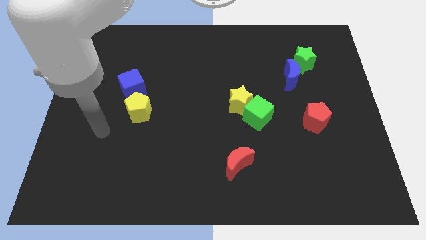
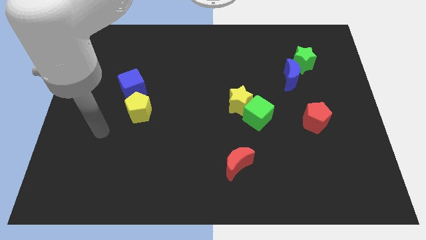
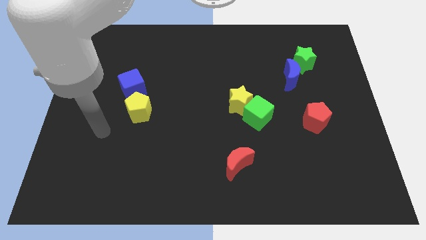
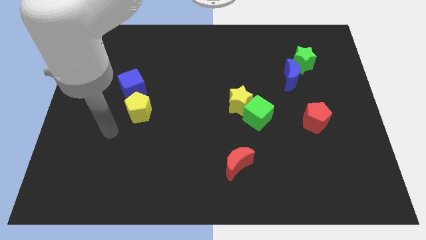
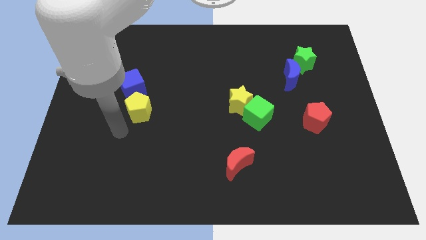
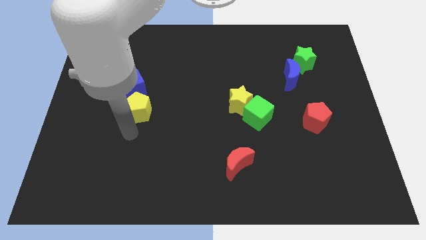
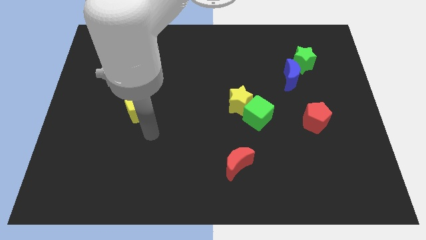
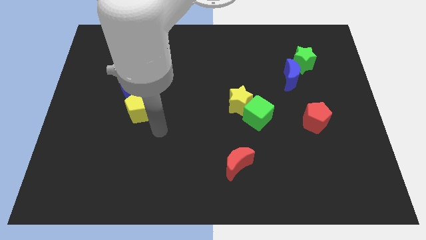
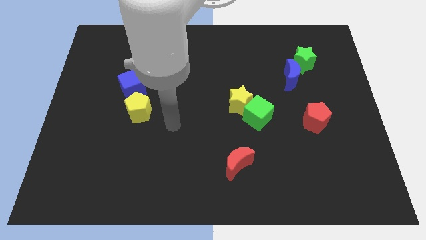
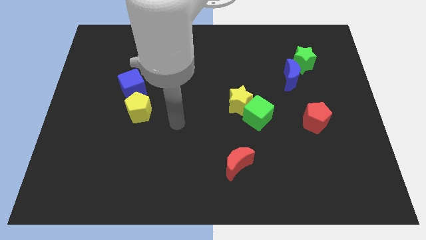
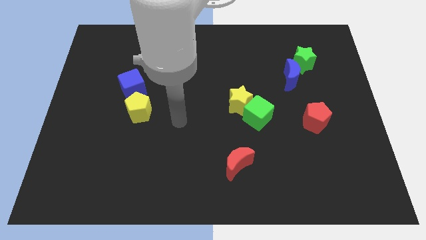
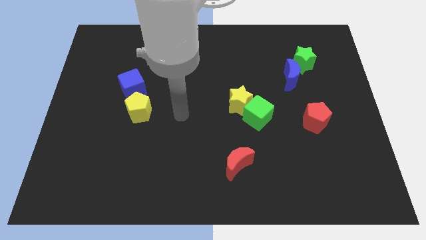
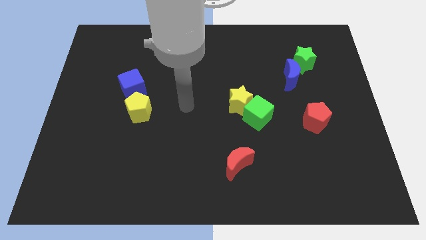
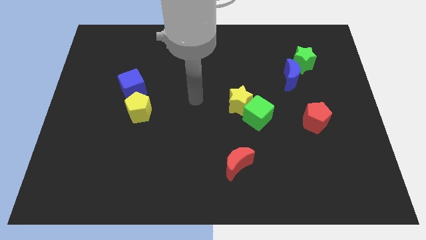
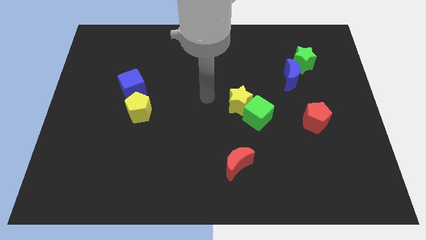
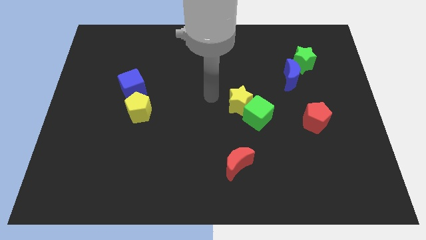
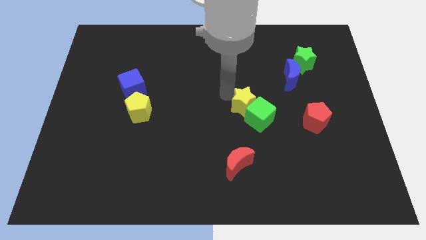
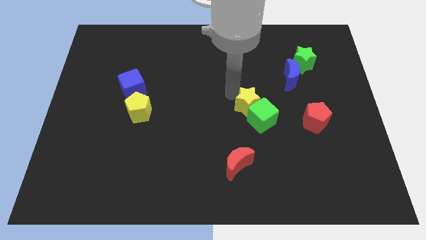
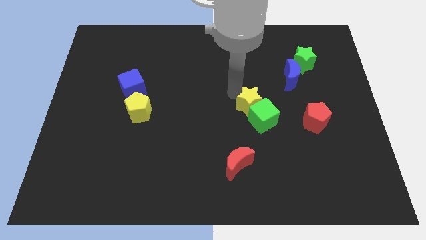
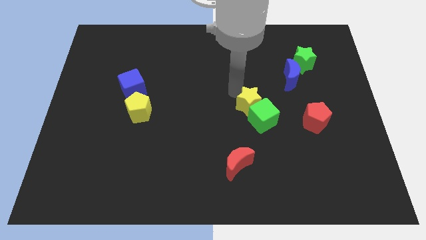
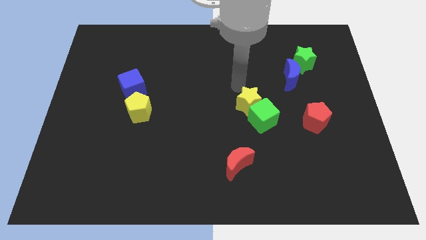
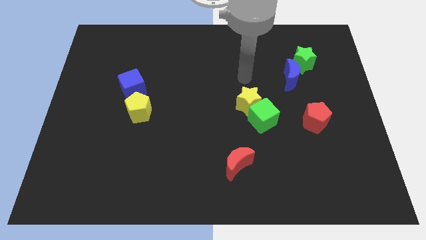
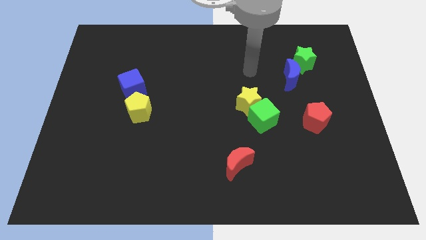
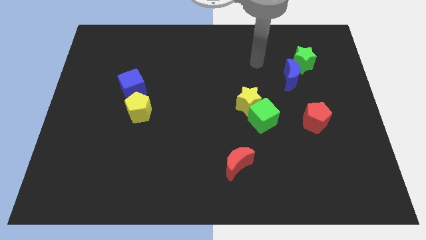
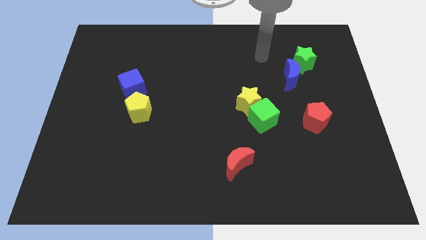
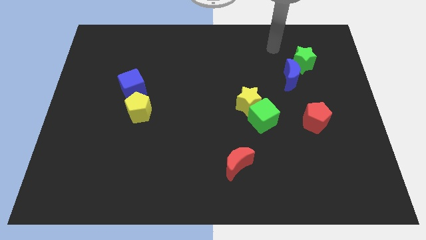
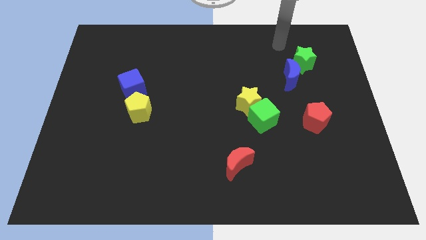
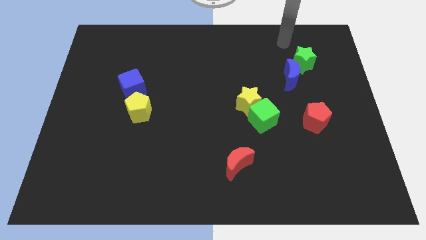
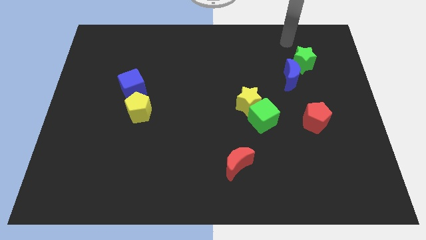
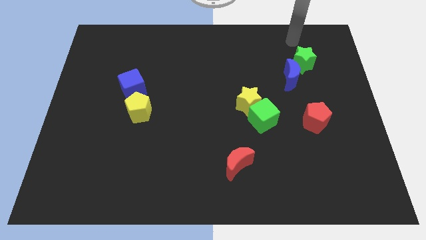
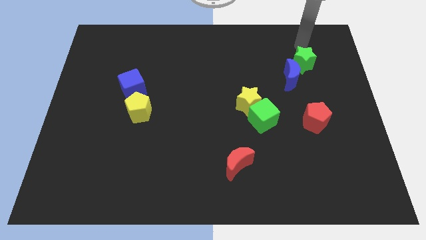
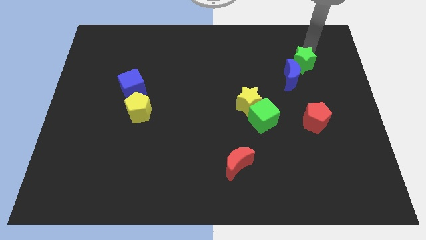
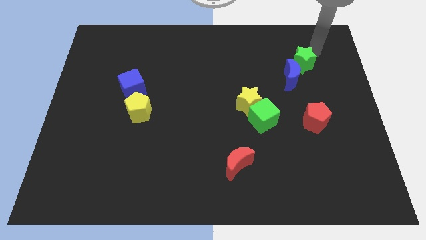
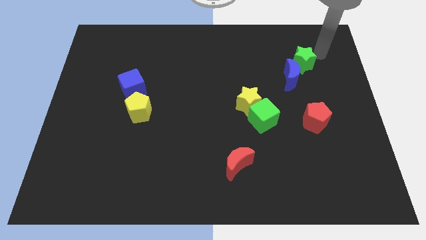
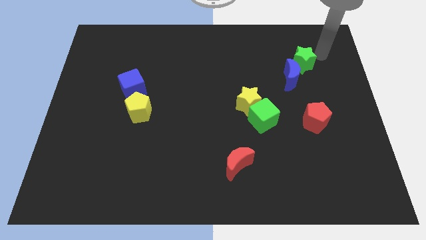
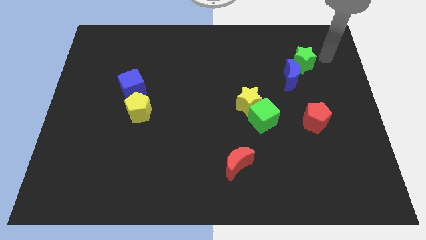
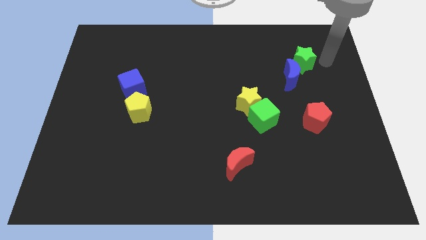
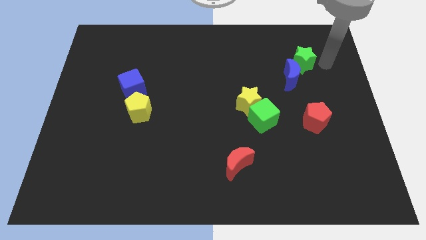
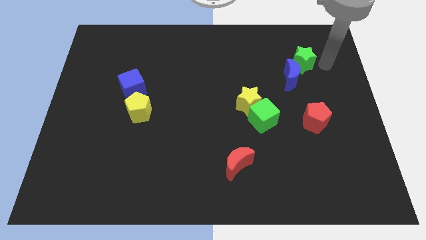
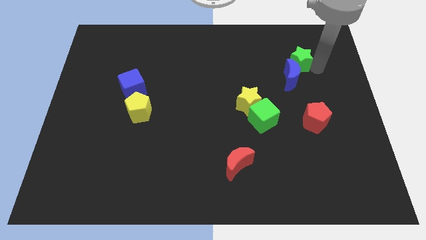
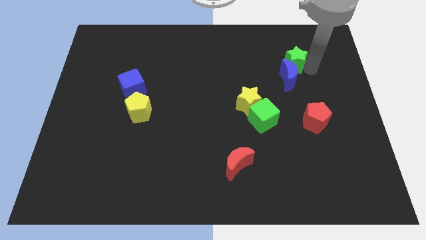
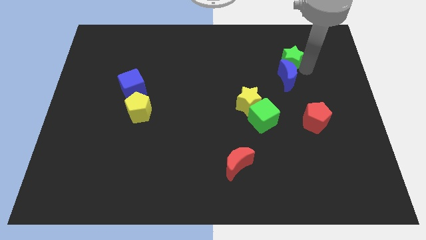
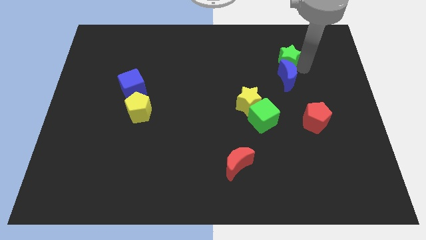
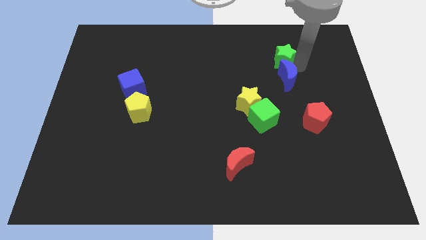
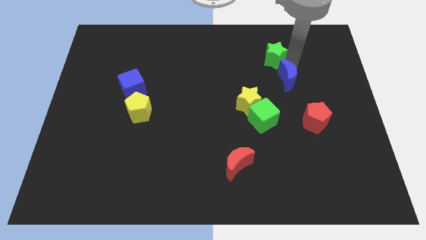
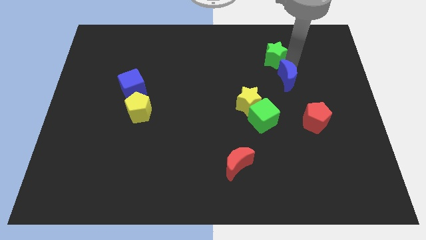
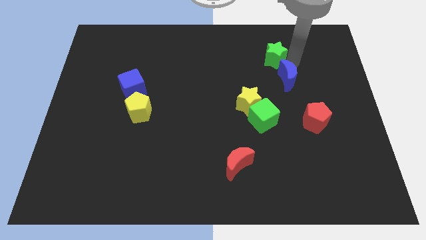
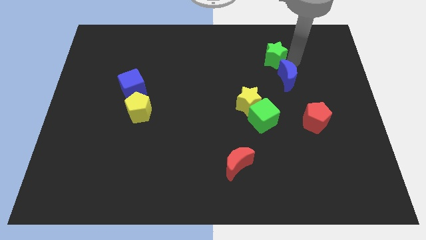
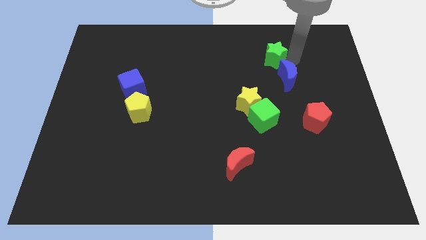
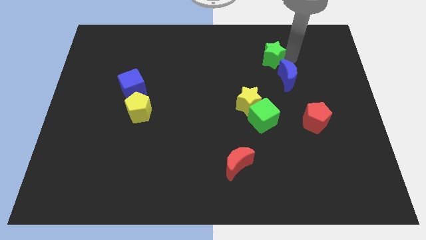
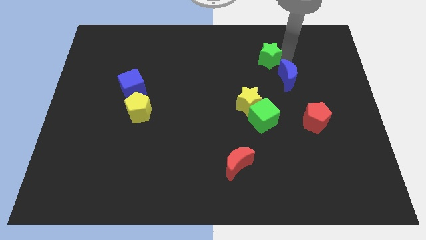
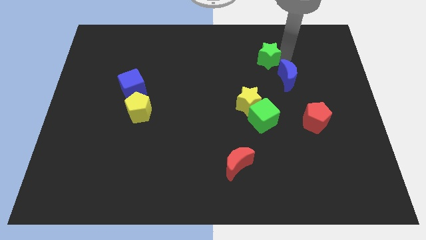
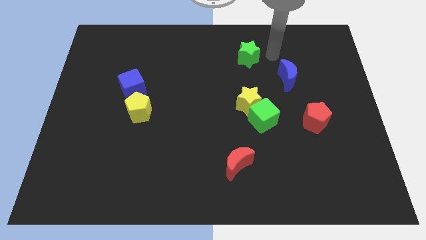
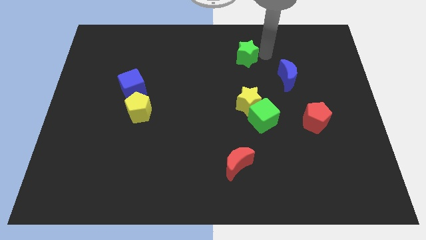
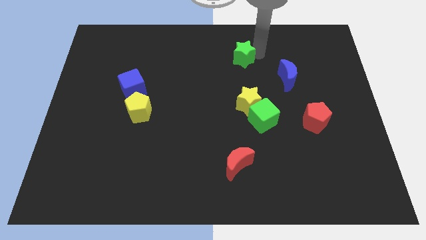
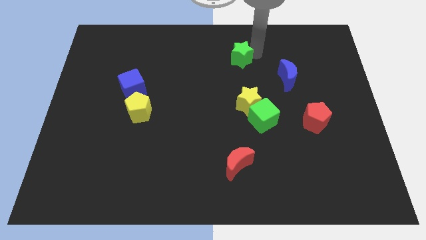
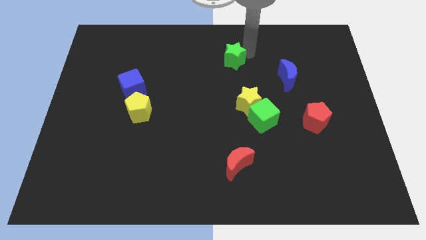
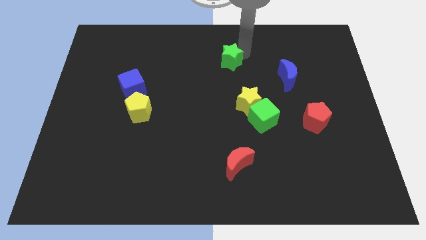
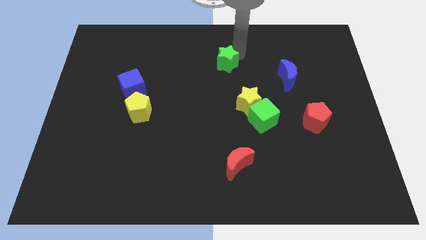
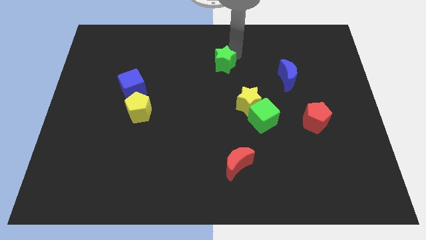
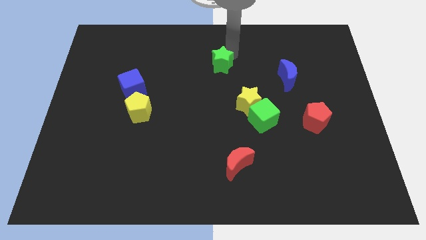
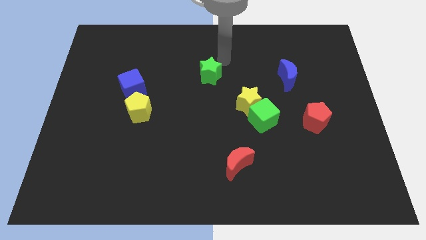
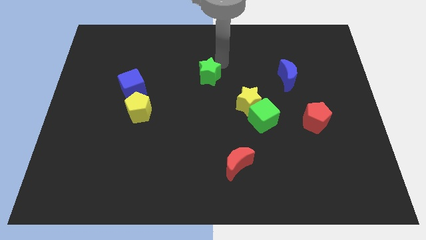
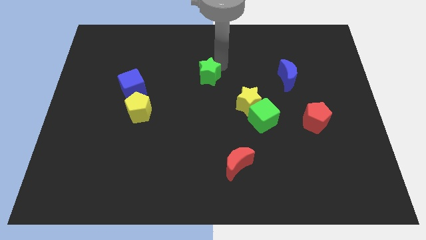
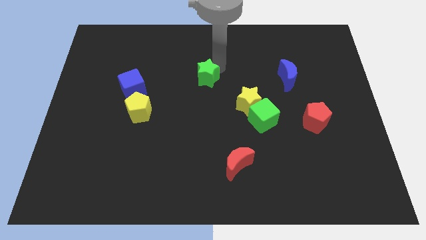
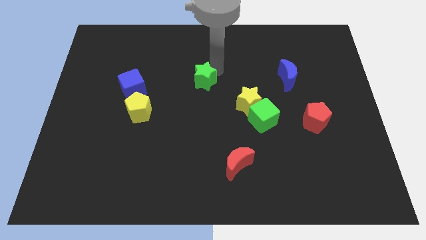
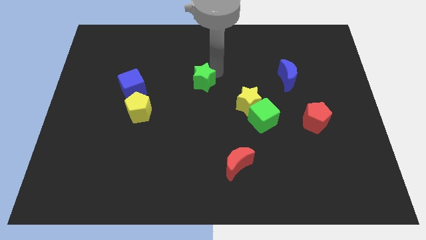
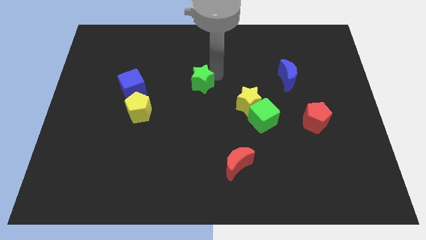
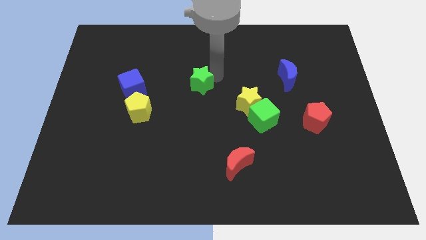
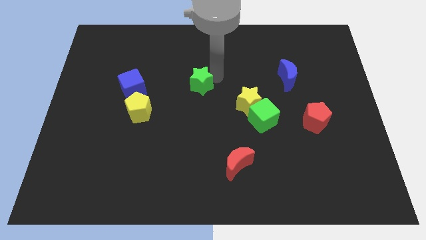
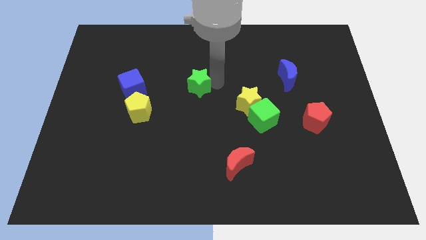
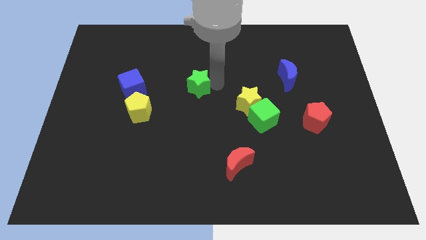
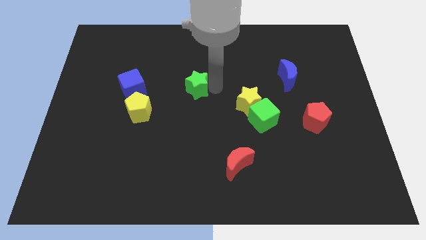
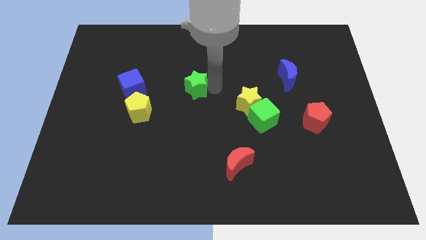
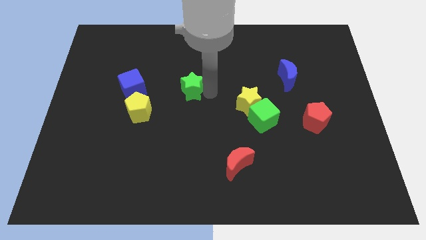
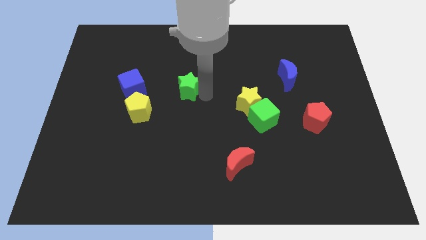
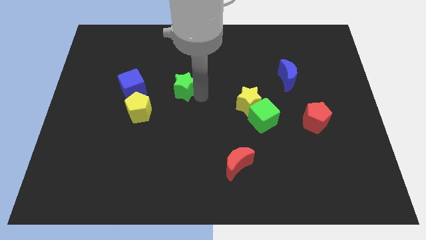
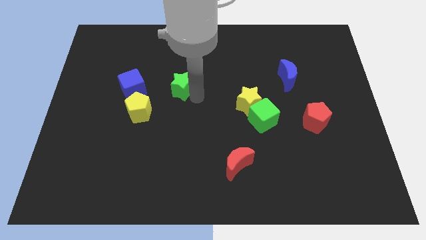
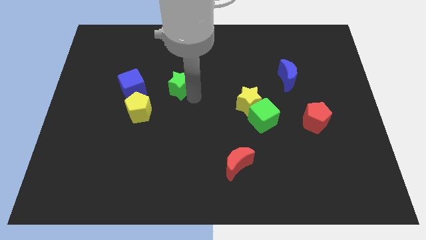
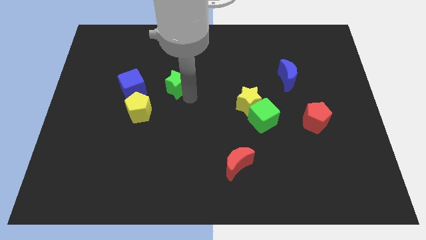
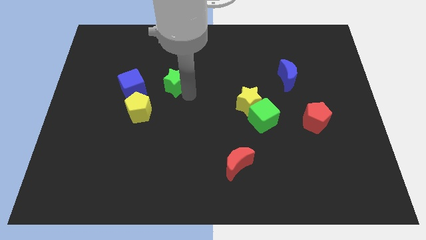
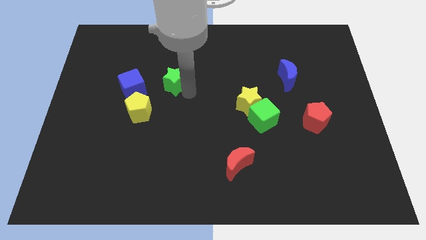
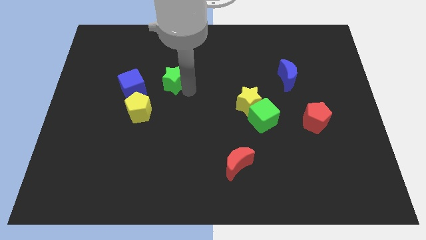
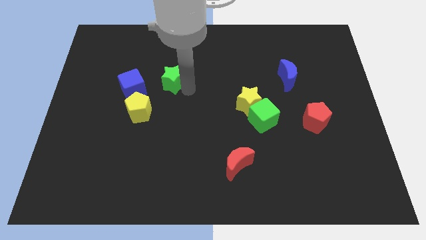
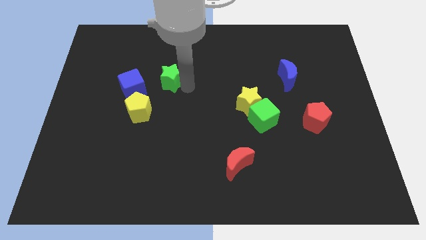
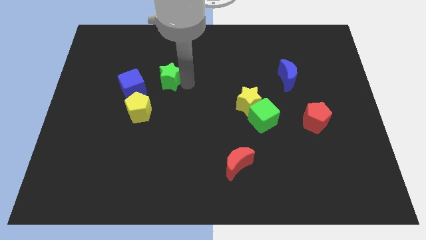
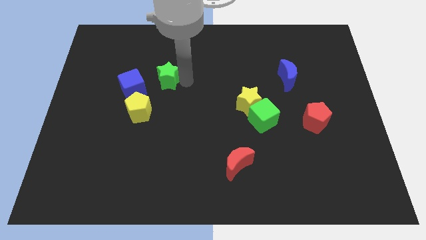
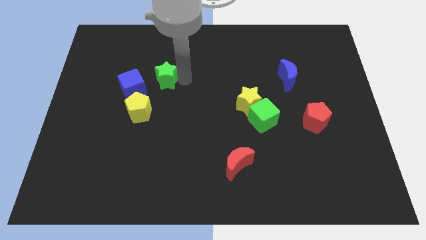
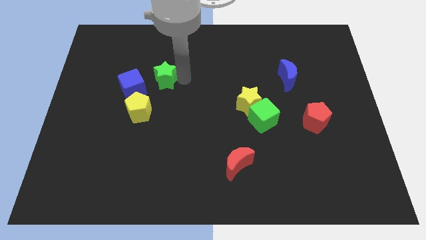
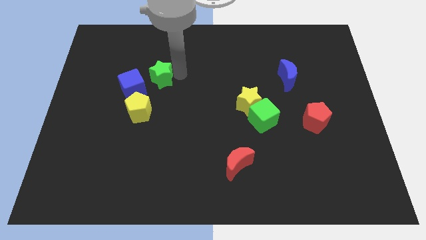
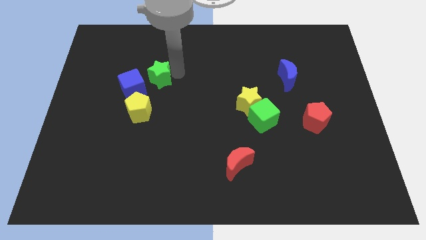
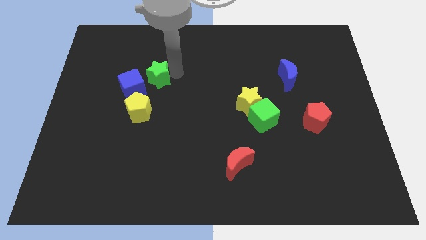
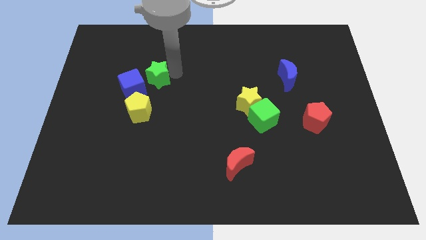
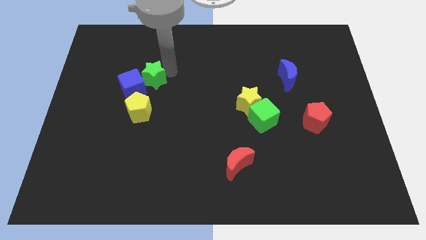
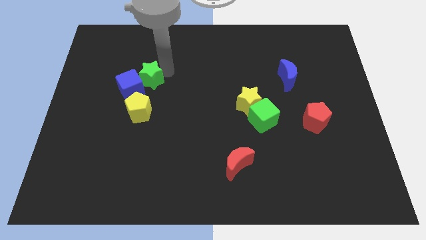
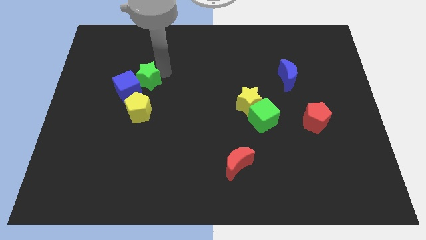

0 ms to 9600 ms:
slide the green star to the blue cube
